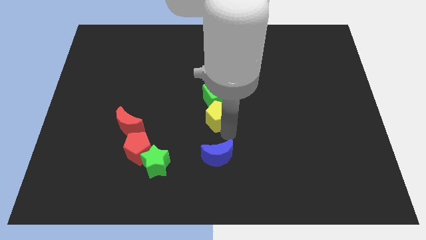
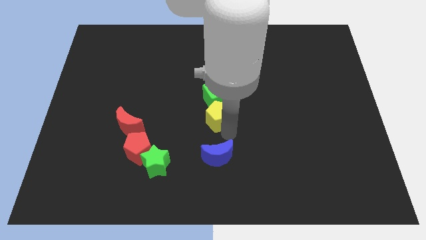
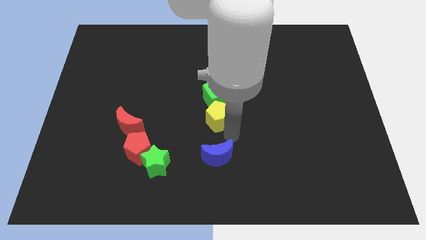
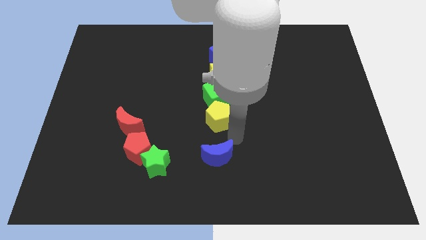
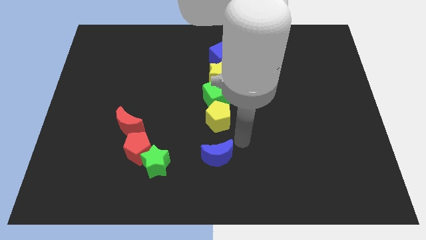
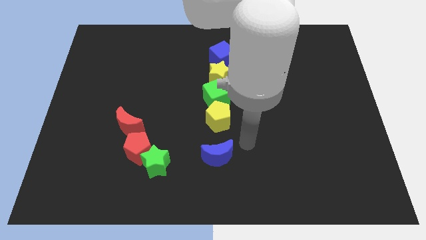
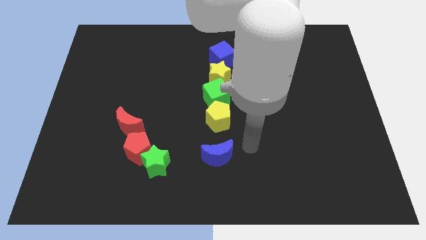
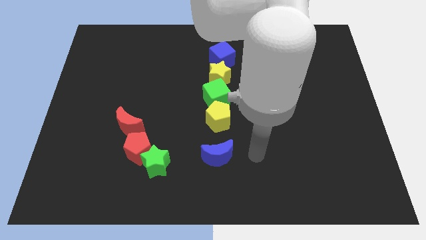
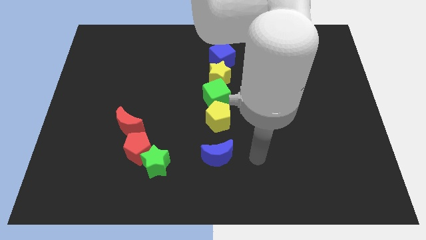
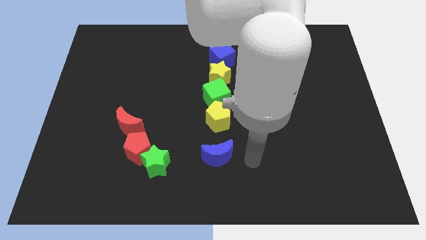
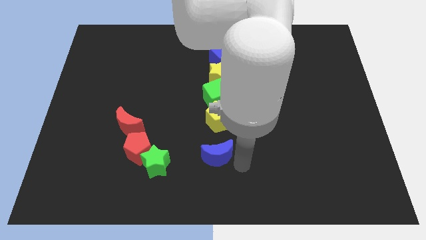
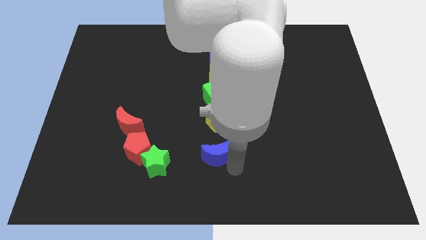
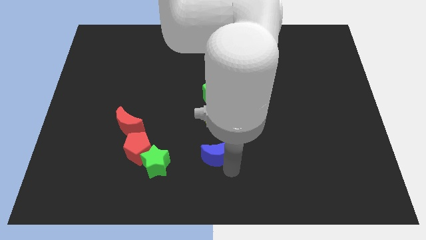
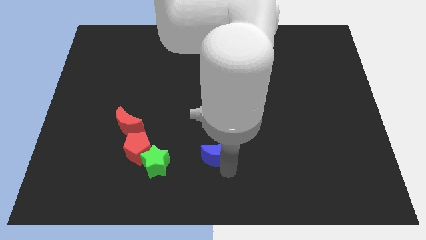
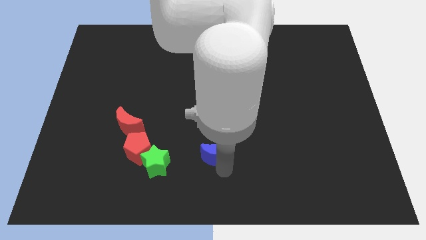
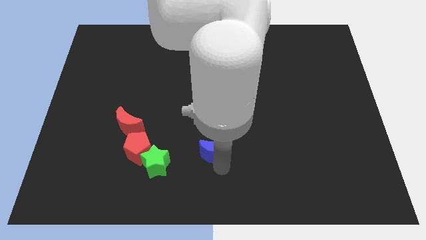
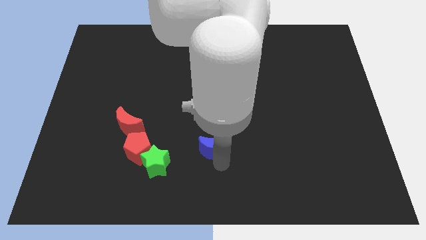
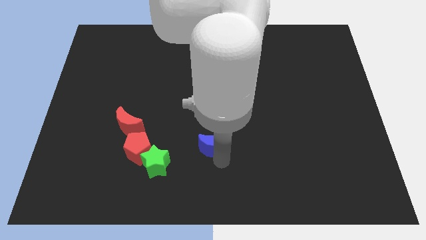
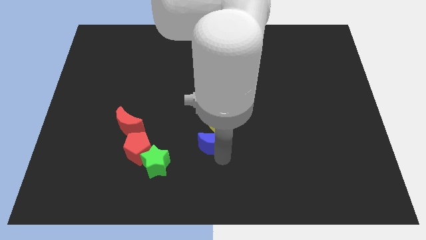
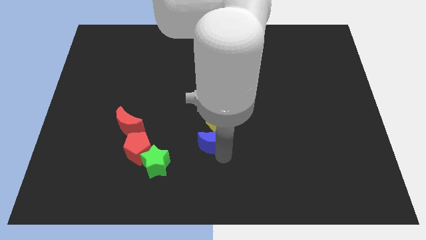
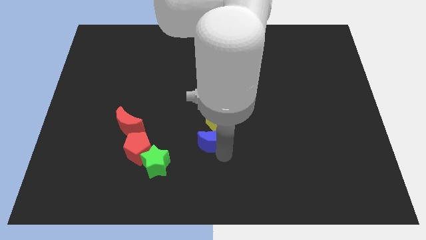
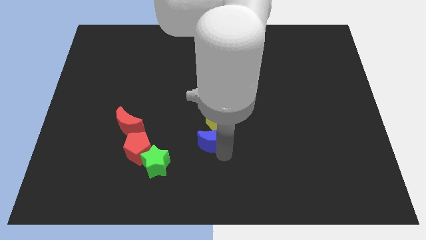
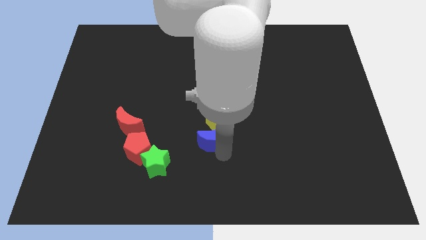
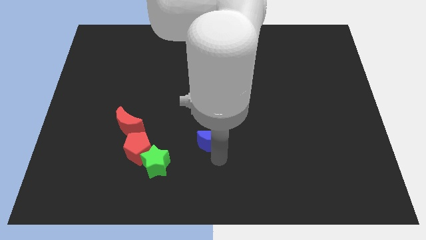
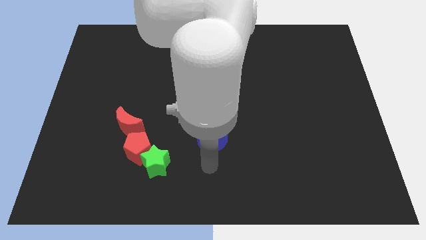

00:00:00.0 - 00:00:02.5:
push the blue moon below the yellow pentagon vertically

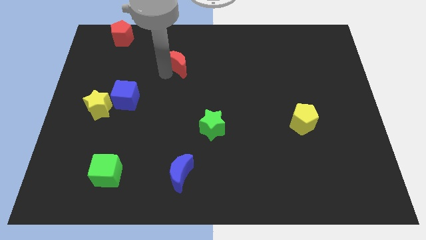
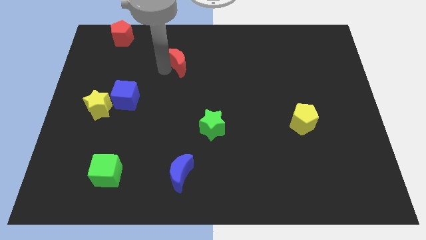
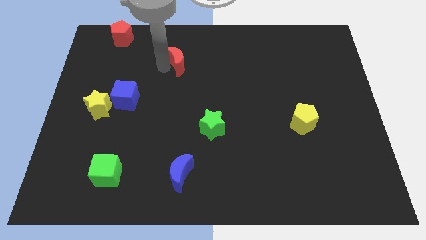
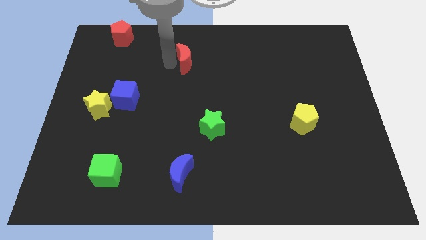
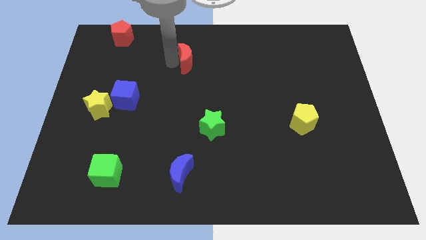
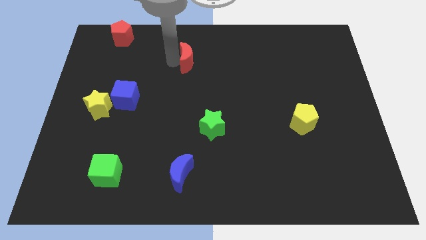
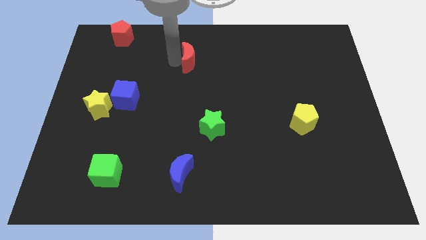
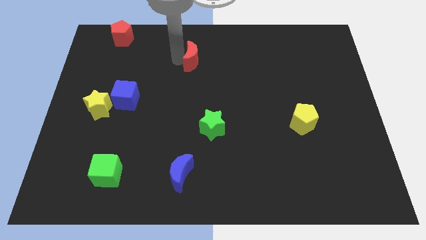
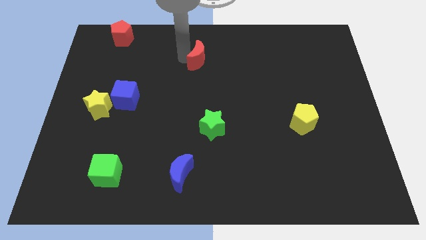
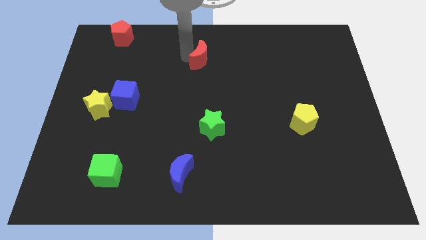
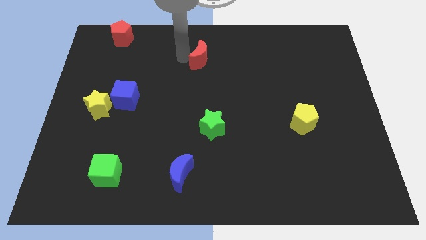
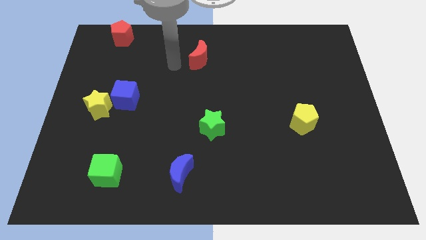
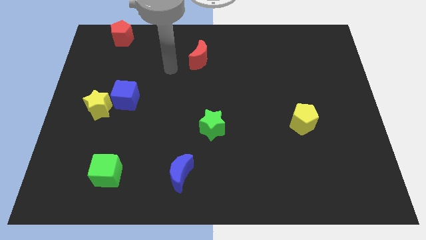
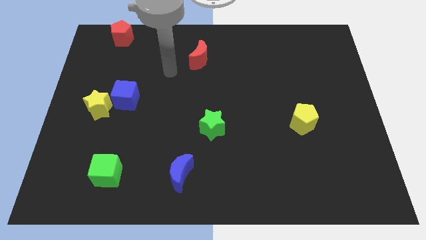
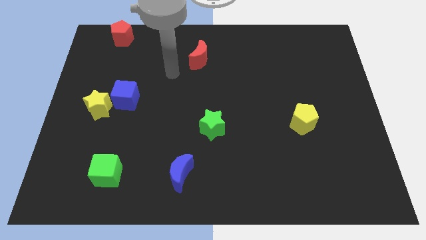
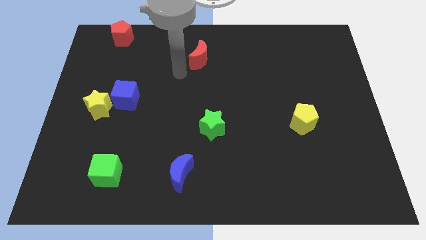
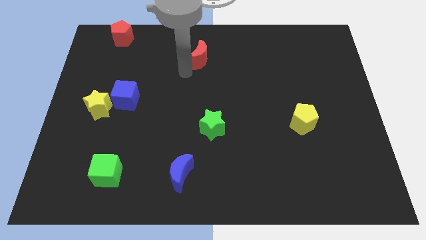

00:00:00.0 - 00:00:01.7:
push the red moon to the right

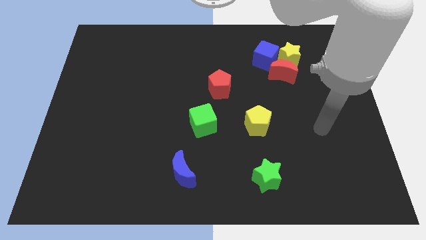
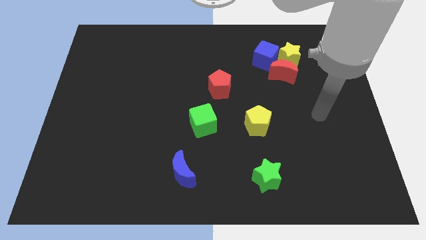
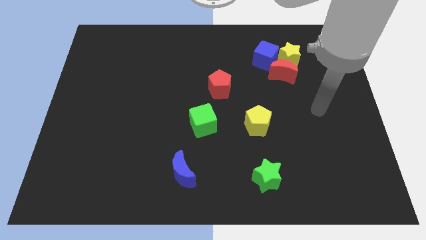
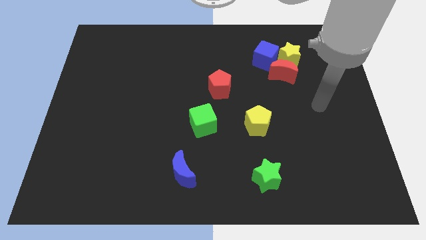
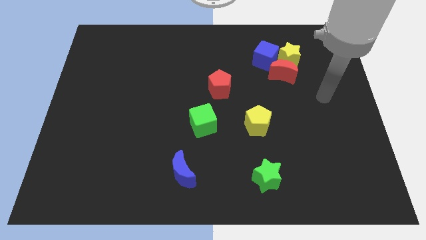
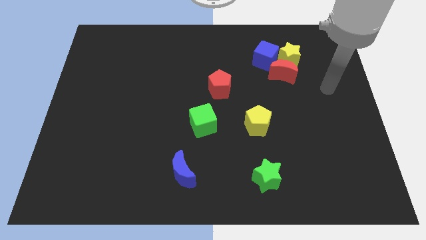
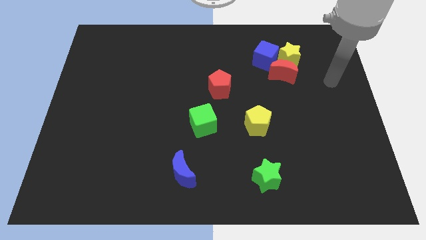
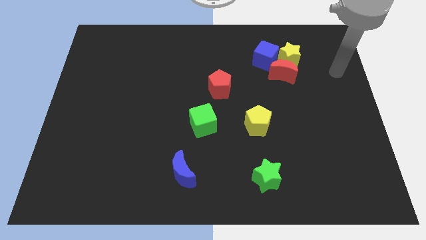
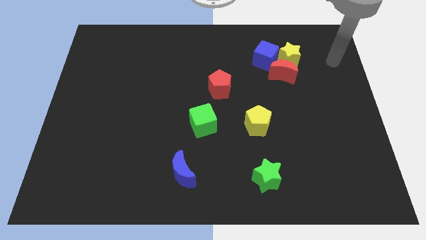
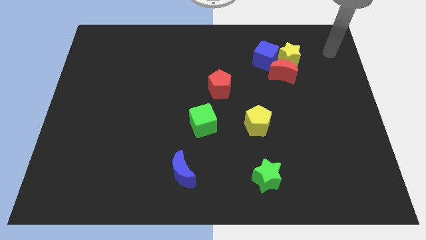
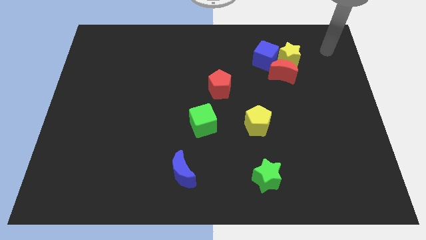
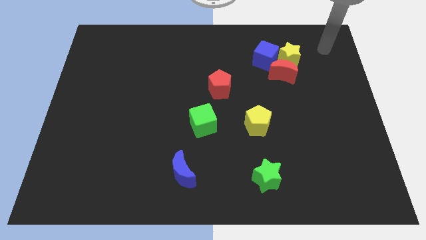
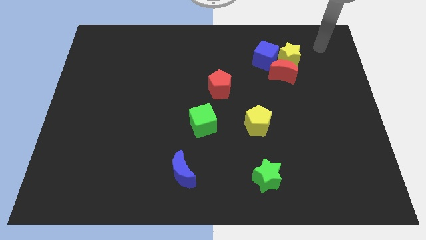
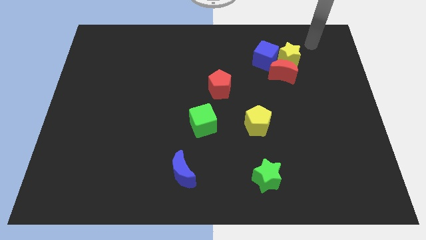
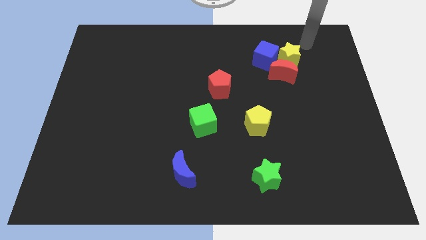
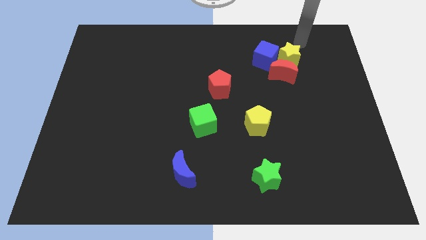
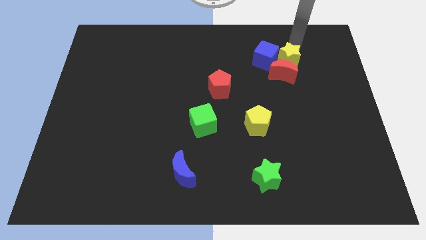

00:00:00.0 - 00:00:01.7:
move your arm near yellow star

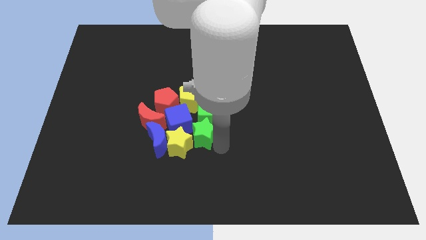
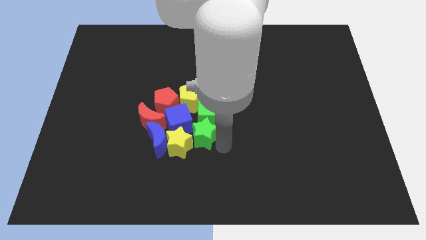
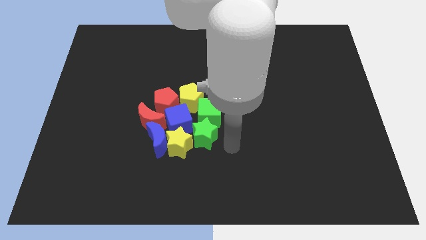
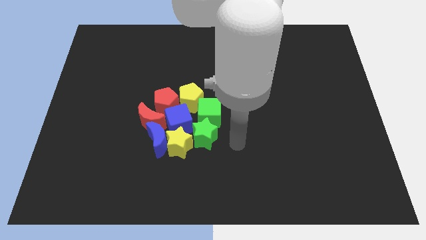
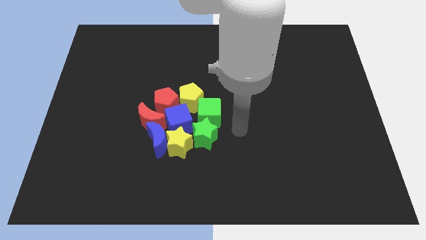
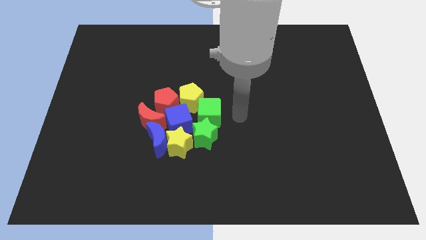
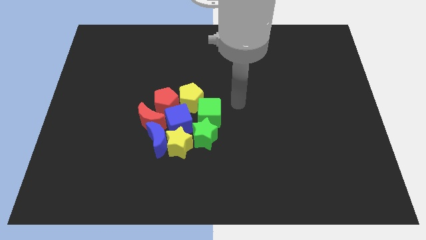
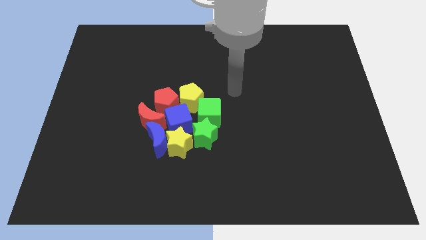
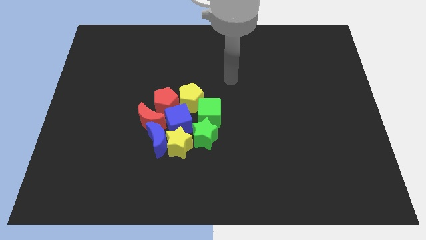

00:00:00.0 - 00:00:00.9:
point your arm at the top right of the green cube

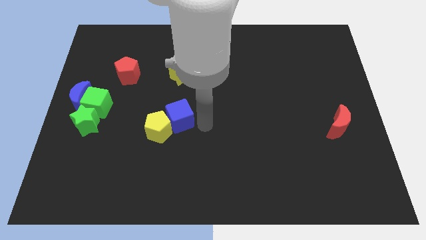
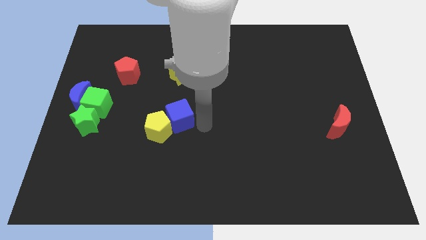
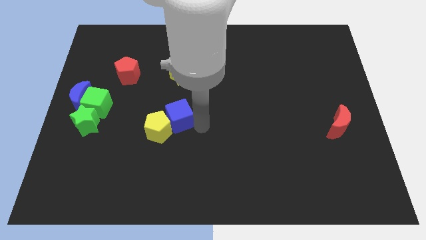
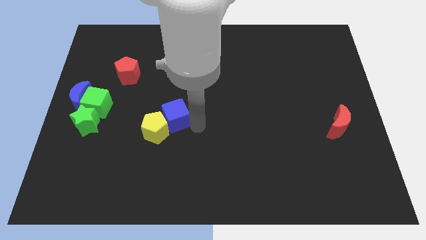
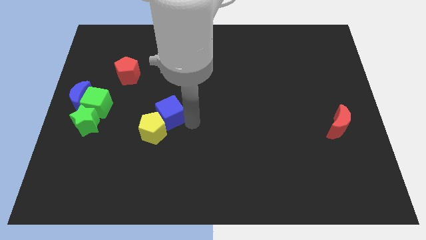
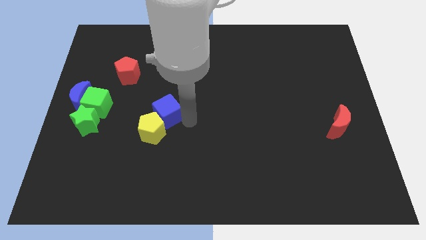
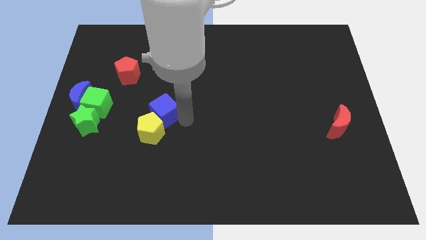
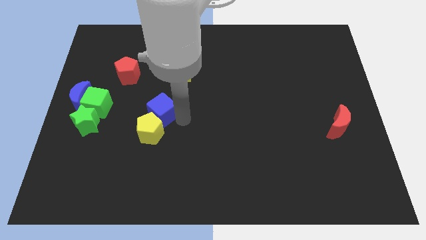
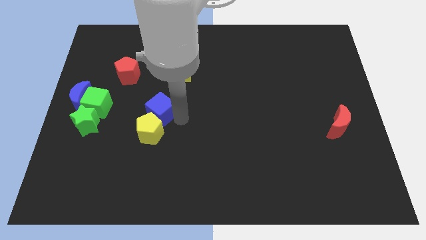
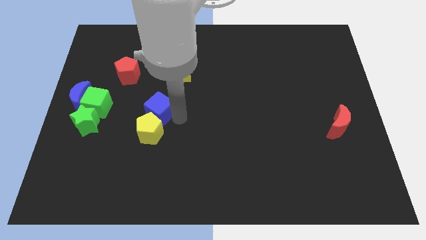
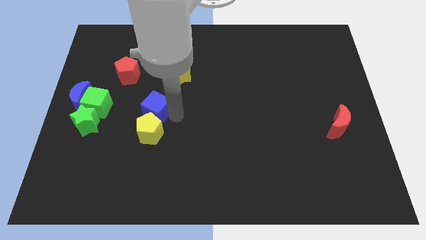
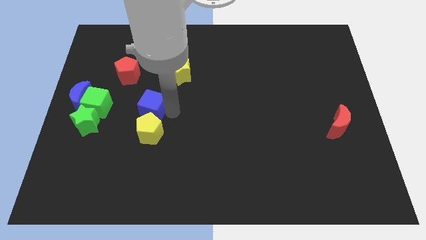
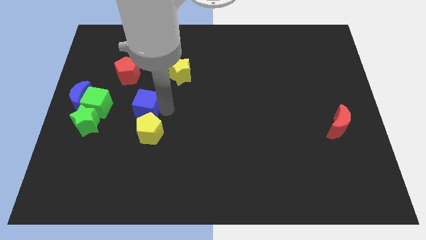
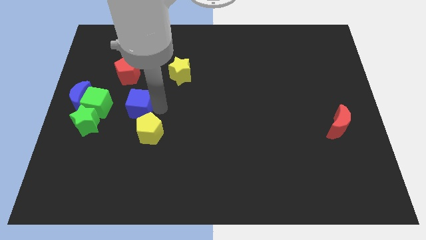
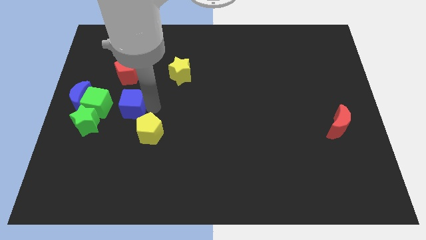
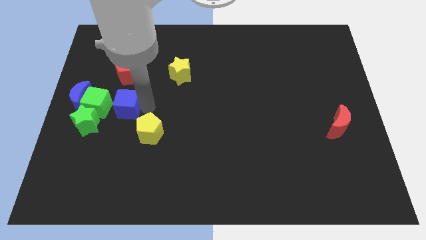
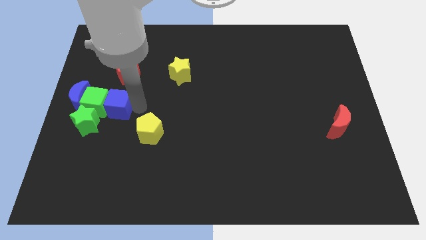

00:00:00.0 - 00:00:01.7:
separate the blue cube from the yellow pentagon

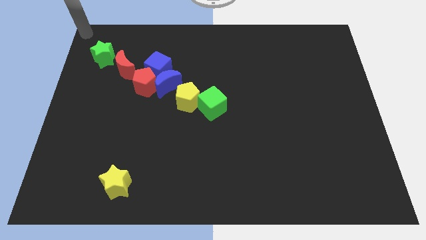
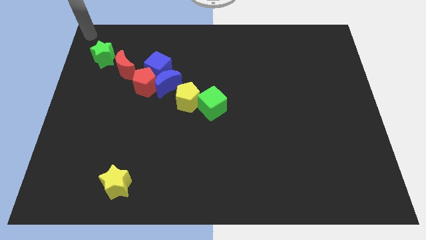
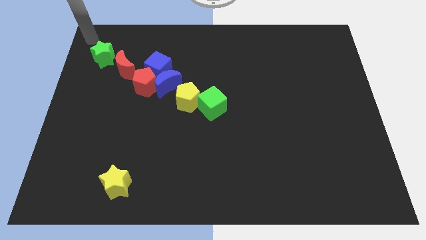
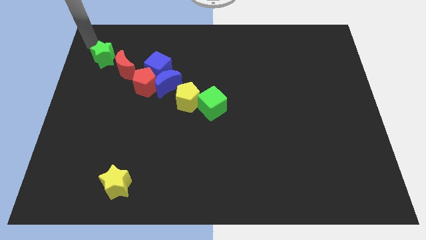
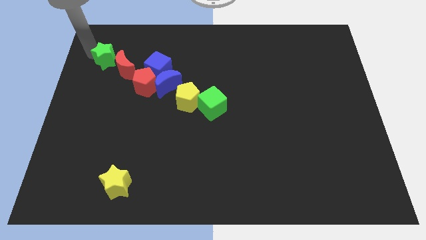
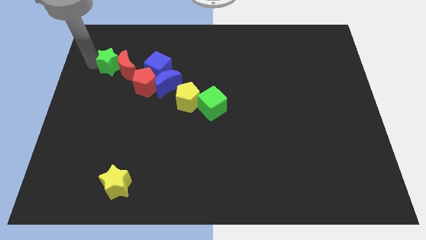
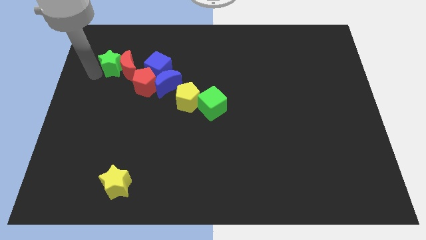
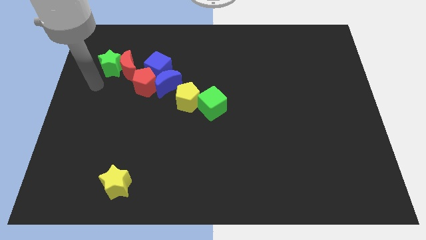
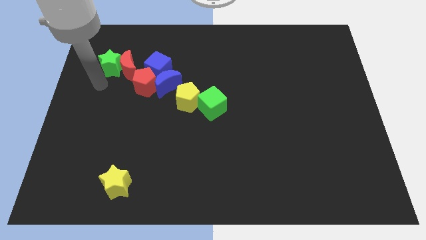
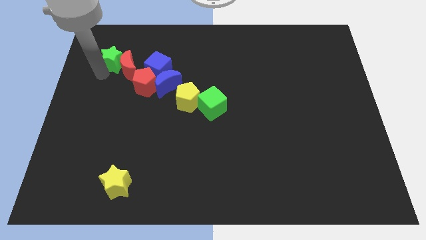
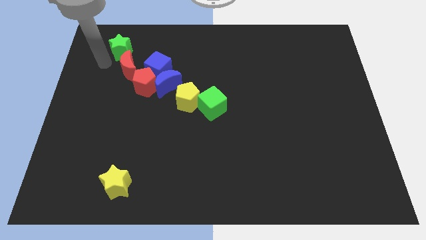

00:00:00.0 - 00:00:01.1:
push the green star into the red moon
